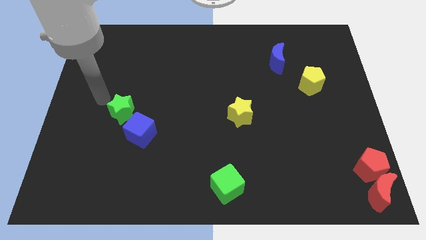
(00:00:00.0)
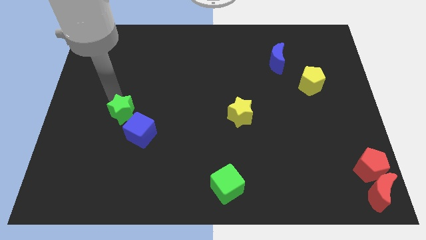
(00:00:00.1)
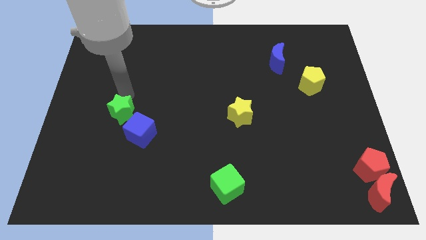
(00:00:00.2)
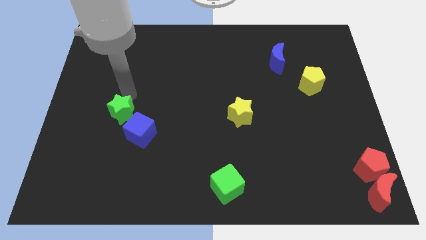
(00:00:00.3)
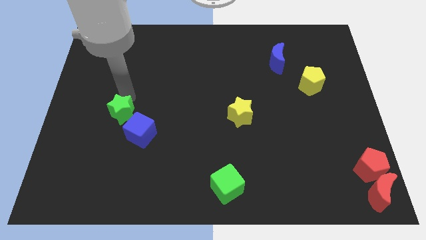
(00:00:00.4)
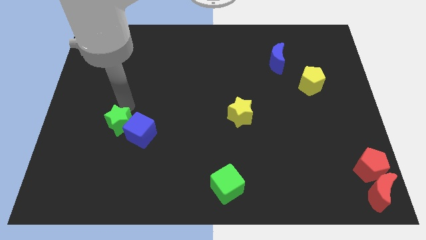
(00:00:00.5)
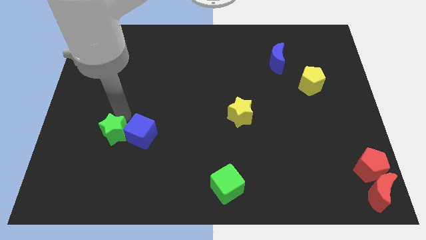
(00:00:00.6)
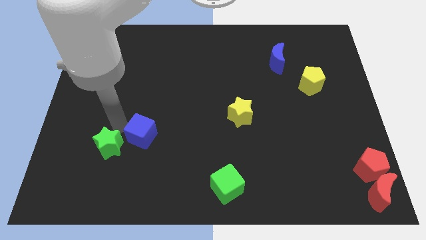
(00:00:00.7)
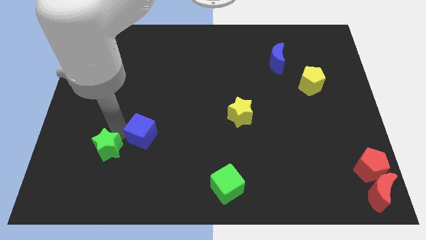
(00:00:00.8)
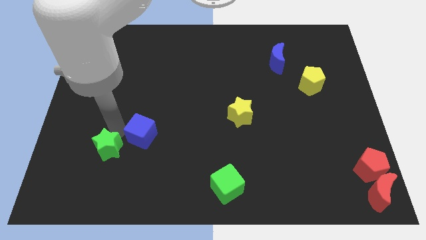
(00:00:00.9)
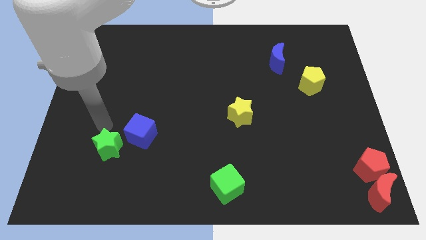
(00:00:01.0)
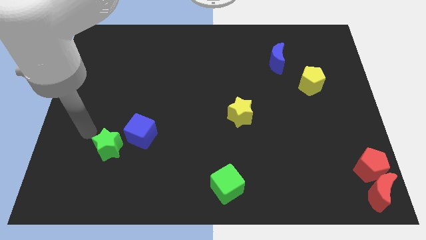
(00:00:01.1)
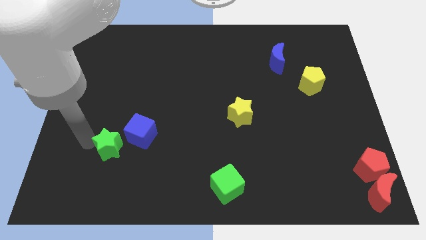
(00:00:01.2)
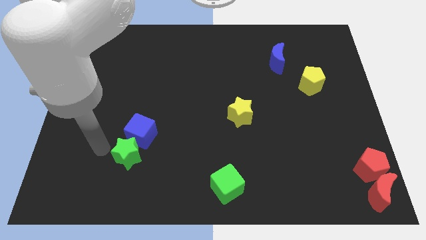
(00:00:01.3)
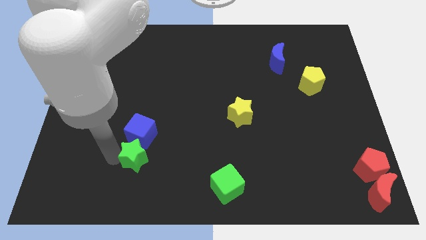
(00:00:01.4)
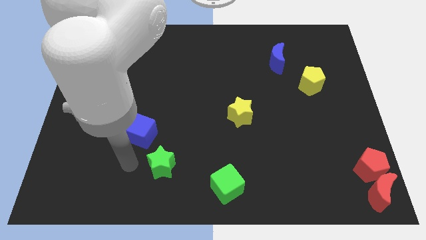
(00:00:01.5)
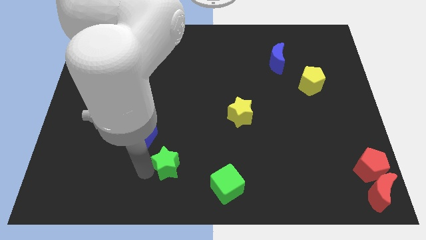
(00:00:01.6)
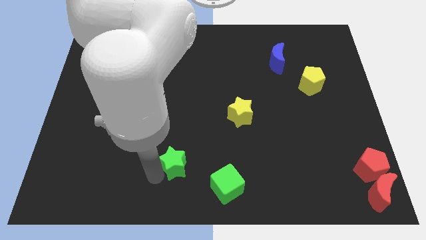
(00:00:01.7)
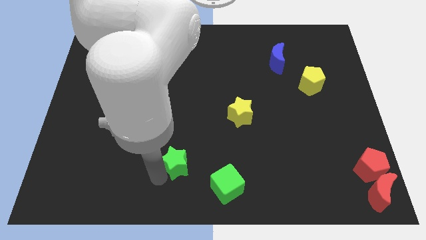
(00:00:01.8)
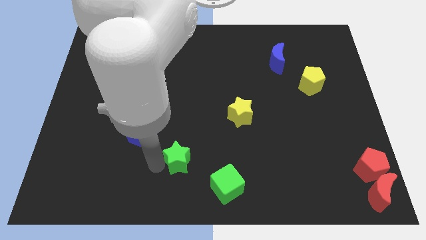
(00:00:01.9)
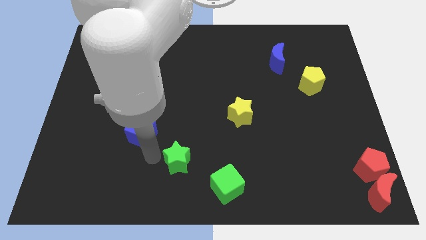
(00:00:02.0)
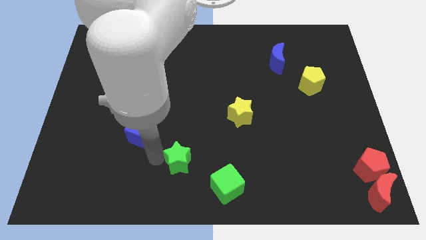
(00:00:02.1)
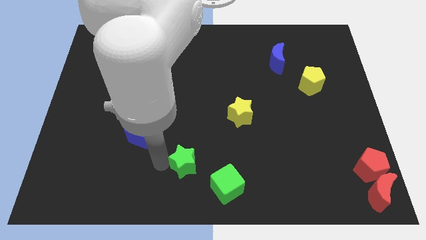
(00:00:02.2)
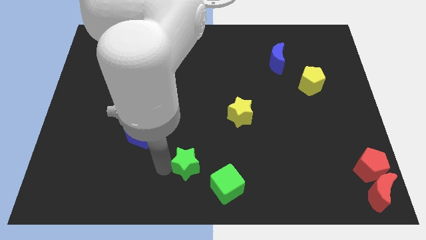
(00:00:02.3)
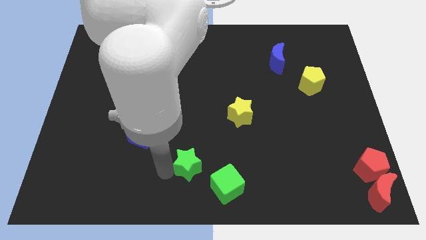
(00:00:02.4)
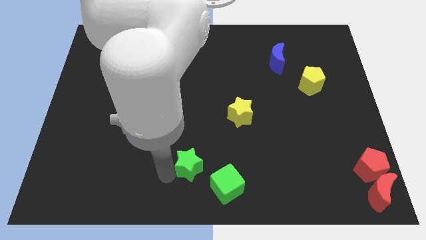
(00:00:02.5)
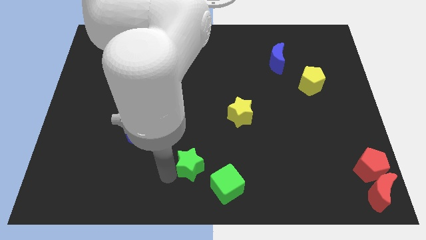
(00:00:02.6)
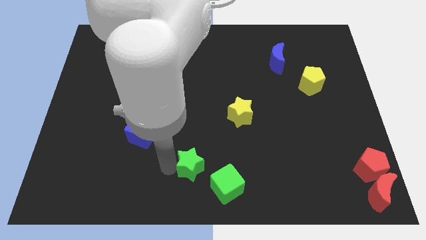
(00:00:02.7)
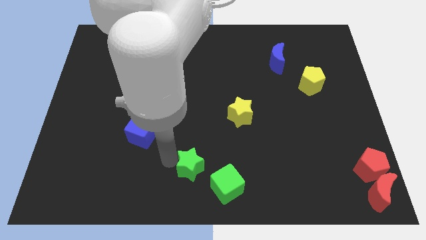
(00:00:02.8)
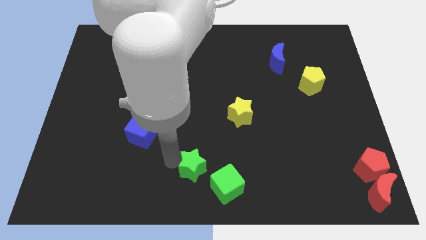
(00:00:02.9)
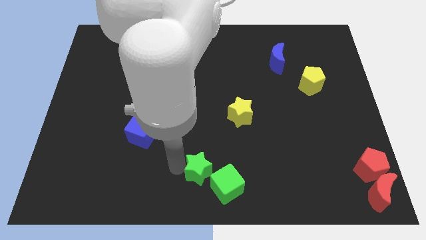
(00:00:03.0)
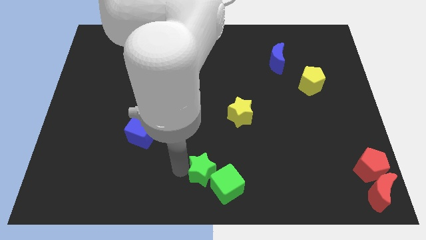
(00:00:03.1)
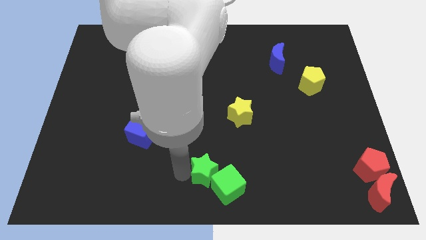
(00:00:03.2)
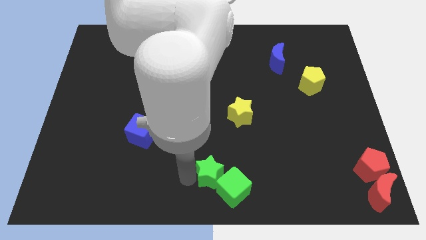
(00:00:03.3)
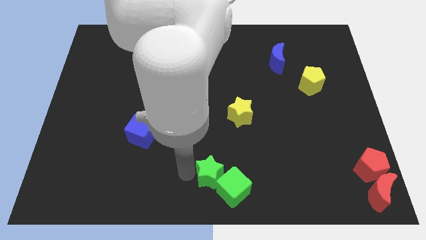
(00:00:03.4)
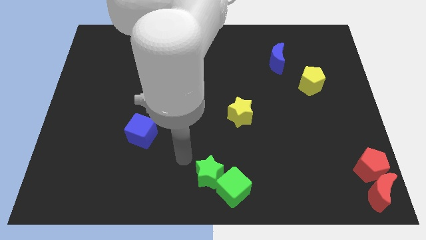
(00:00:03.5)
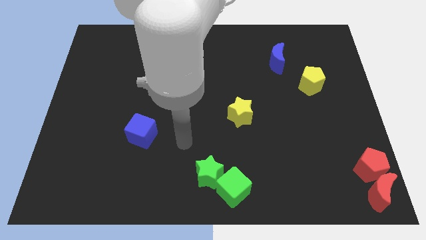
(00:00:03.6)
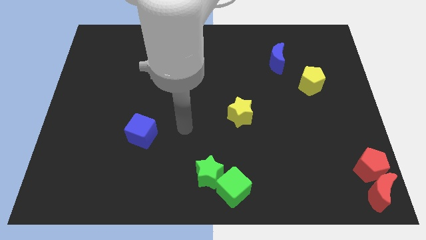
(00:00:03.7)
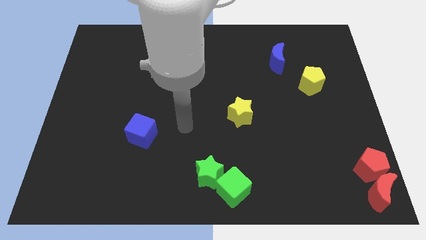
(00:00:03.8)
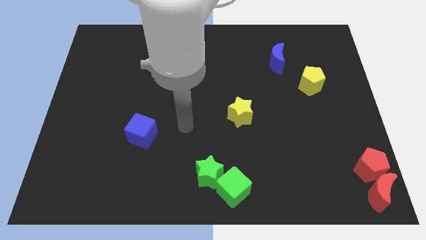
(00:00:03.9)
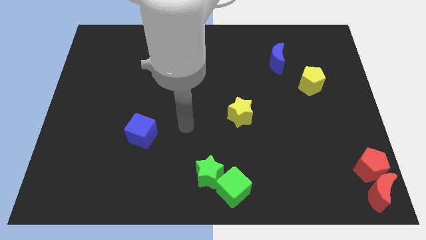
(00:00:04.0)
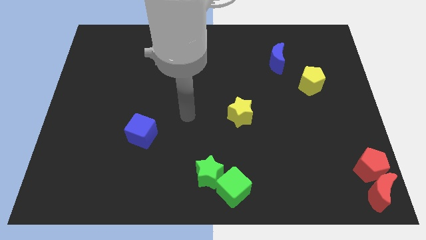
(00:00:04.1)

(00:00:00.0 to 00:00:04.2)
place the green star to the left of green cube

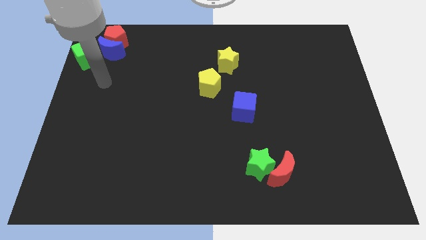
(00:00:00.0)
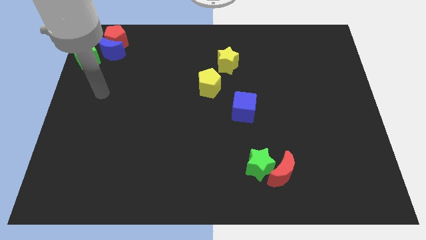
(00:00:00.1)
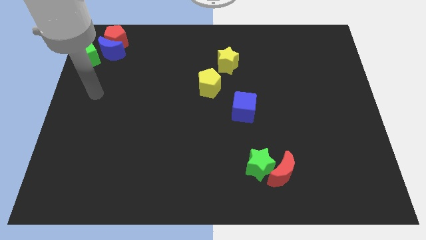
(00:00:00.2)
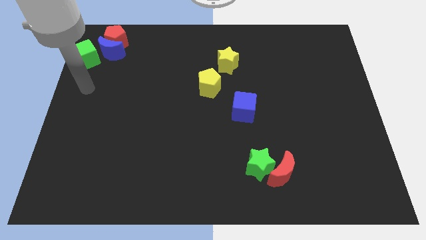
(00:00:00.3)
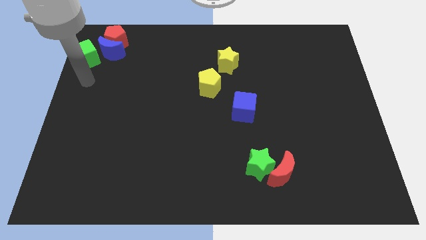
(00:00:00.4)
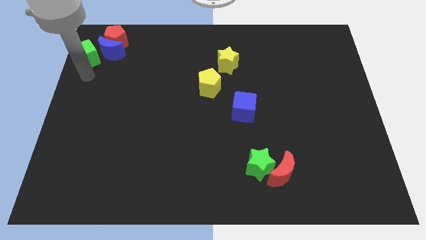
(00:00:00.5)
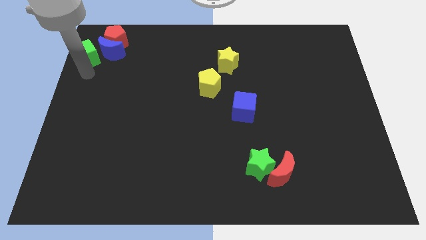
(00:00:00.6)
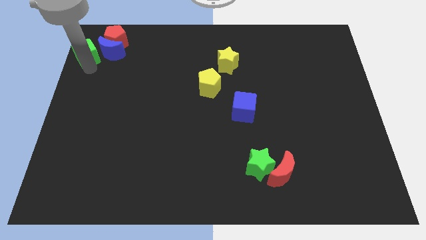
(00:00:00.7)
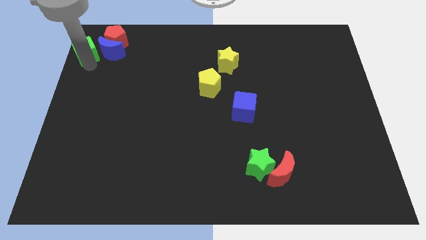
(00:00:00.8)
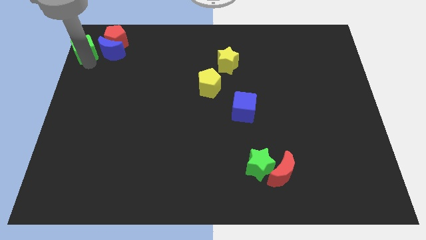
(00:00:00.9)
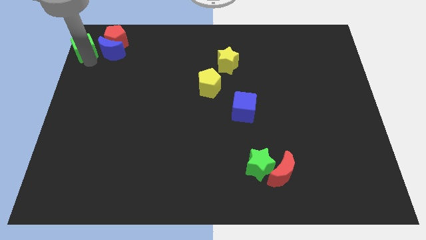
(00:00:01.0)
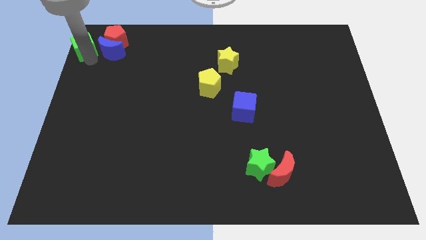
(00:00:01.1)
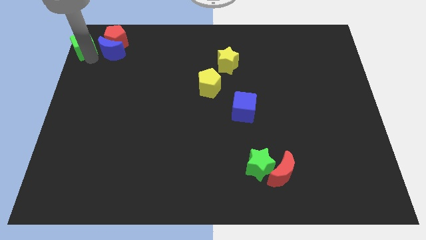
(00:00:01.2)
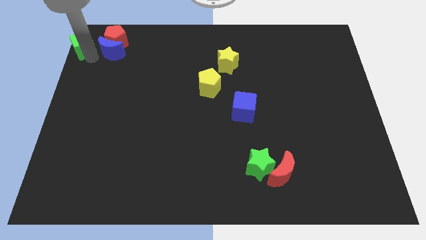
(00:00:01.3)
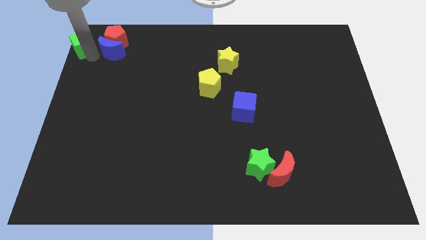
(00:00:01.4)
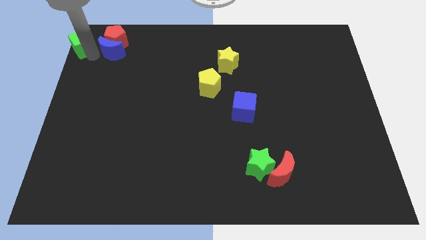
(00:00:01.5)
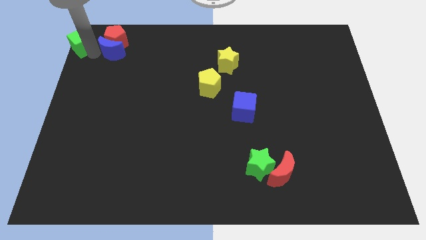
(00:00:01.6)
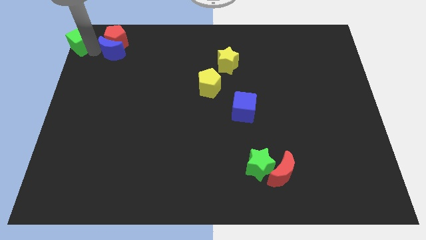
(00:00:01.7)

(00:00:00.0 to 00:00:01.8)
push the green cube to the left top corner of the board

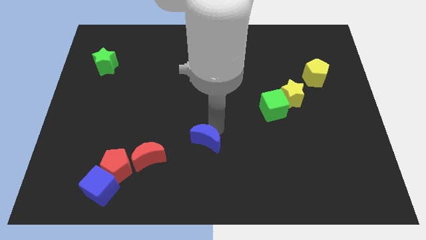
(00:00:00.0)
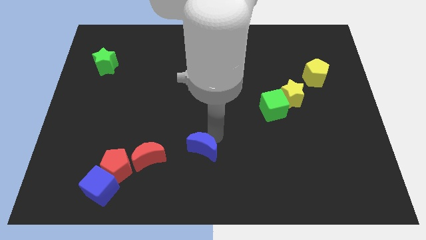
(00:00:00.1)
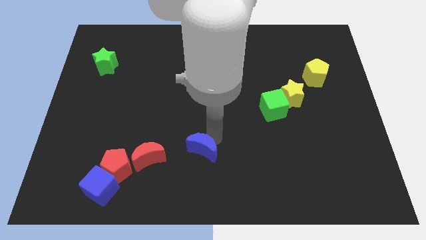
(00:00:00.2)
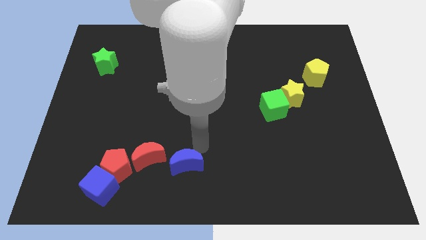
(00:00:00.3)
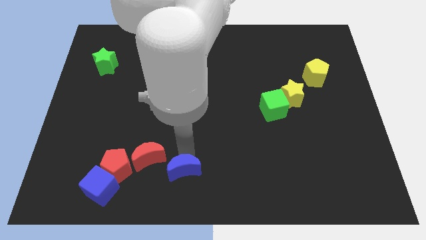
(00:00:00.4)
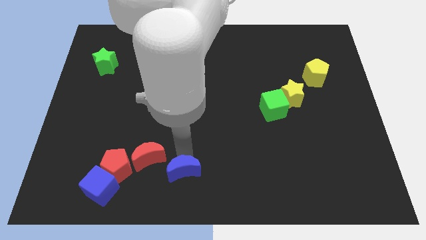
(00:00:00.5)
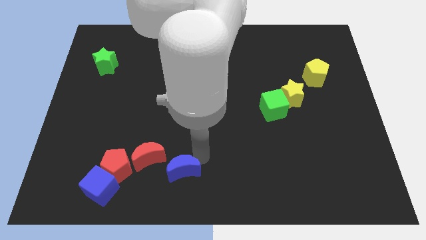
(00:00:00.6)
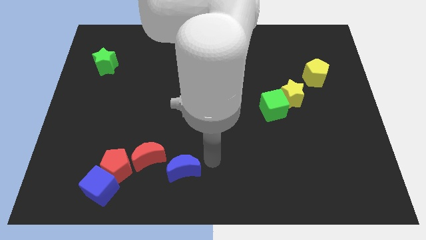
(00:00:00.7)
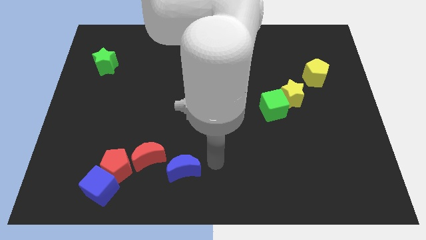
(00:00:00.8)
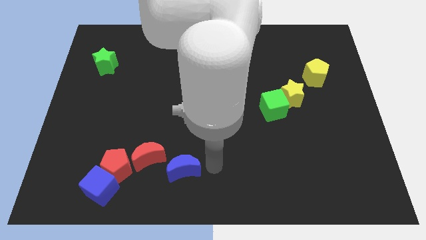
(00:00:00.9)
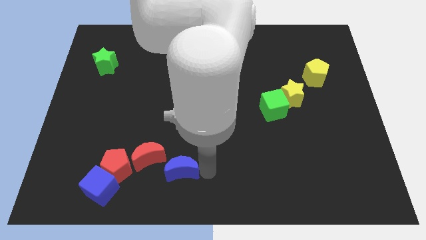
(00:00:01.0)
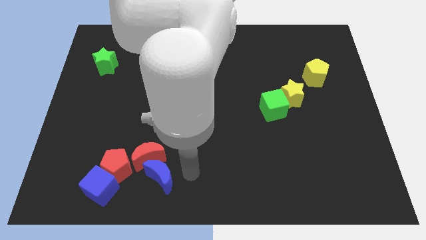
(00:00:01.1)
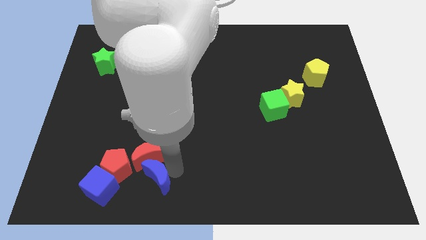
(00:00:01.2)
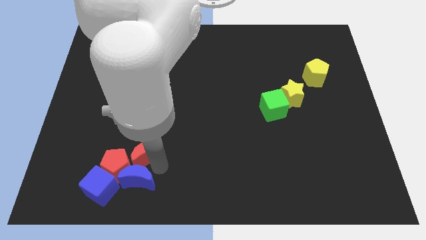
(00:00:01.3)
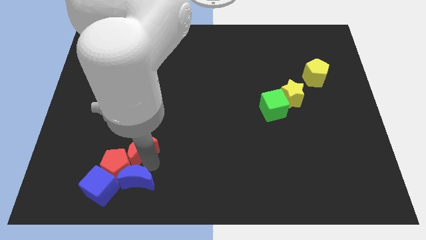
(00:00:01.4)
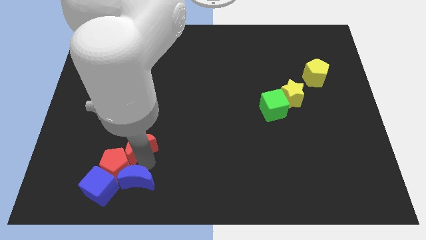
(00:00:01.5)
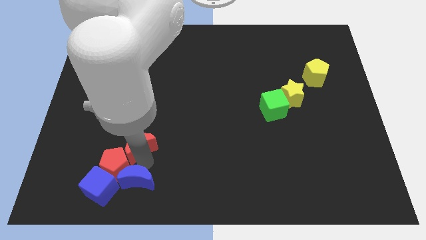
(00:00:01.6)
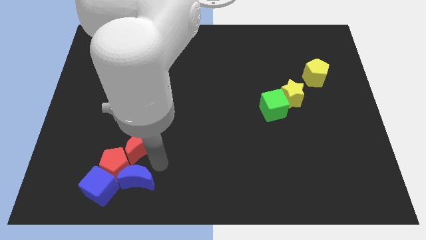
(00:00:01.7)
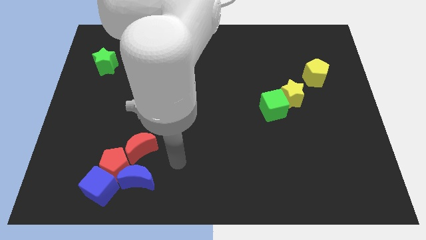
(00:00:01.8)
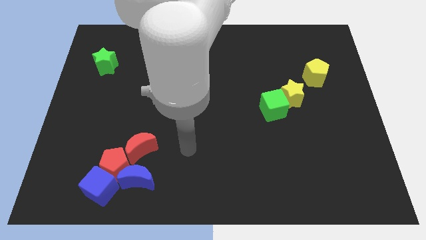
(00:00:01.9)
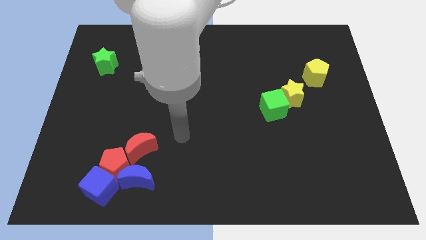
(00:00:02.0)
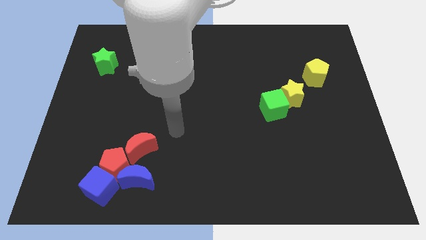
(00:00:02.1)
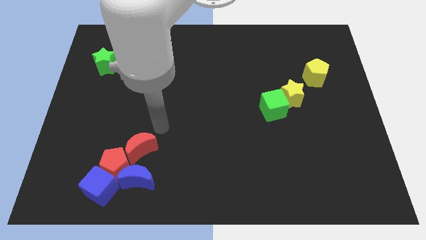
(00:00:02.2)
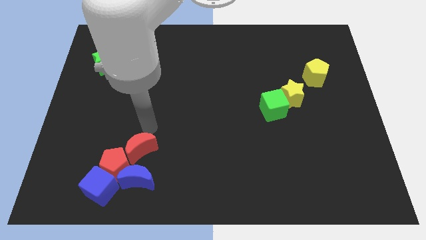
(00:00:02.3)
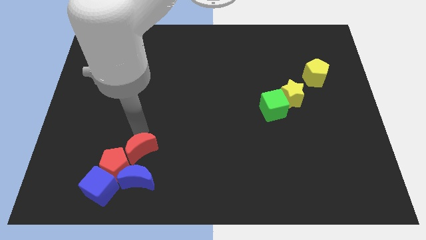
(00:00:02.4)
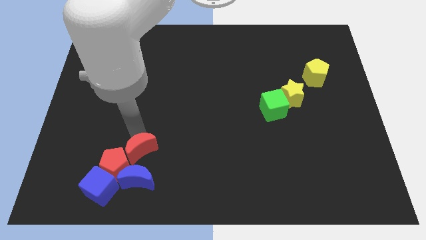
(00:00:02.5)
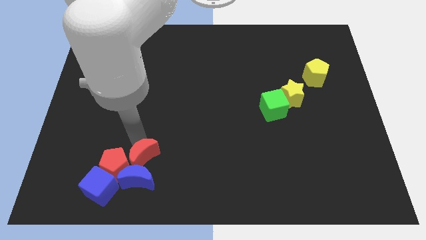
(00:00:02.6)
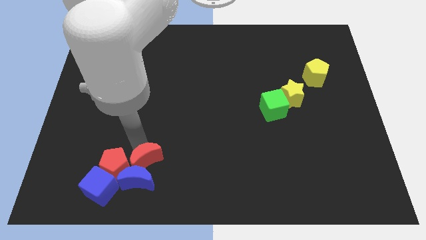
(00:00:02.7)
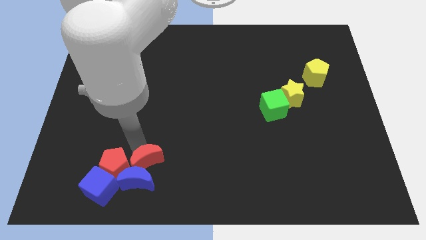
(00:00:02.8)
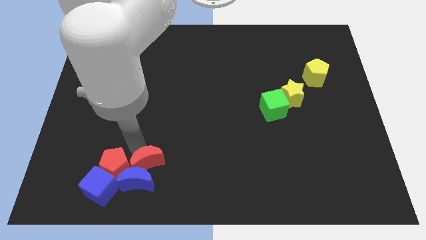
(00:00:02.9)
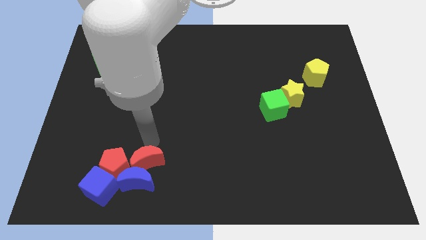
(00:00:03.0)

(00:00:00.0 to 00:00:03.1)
move blue moon close to the blue cube
